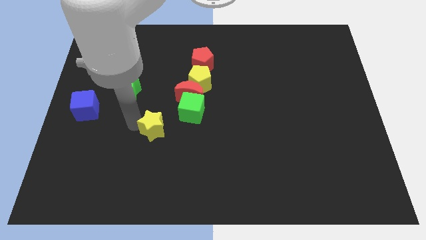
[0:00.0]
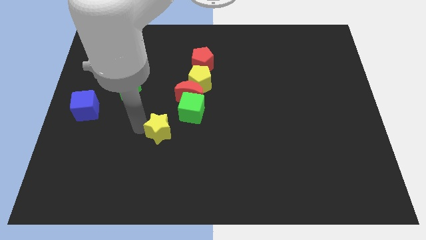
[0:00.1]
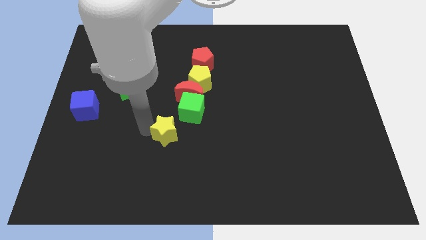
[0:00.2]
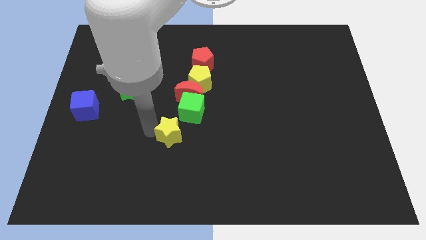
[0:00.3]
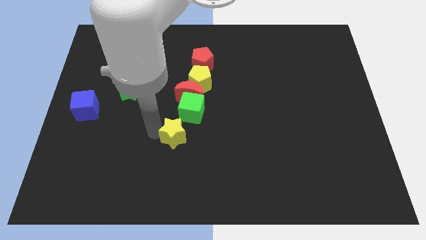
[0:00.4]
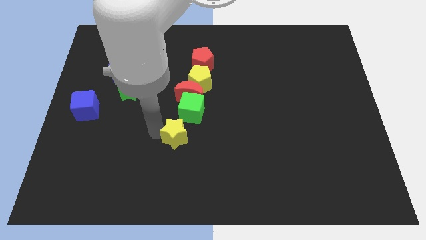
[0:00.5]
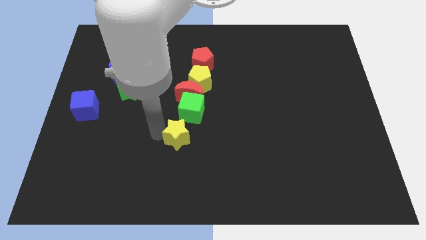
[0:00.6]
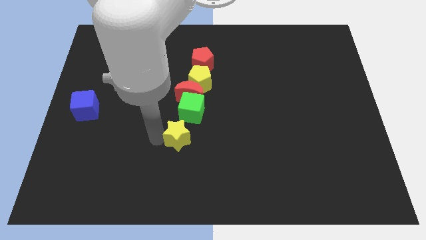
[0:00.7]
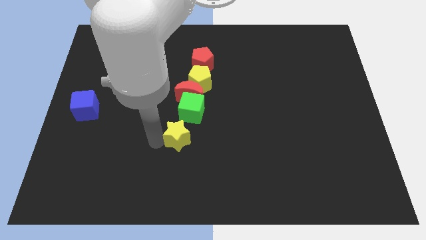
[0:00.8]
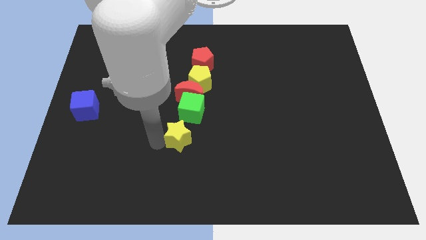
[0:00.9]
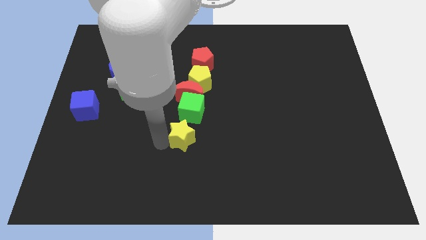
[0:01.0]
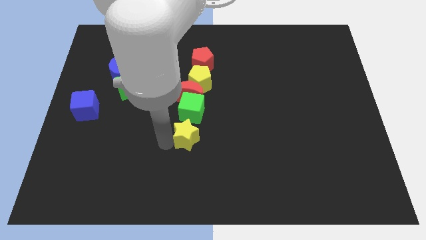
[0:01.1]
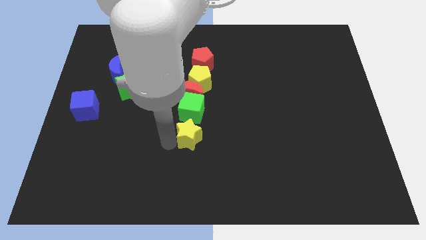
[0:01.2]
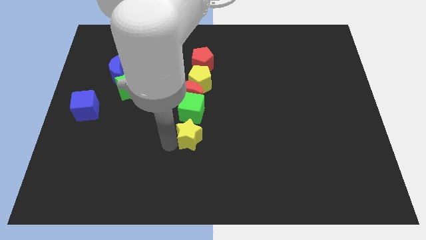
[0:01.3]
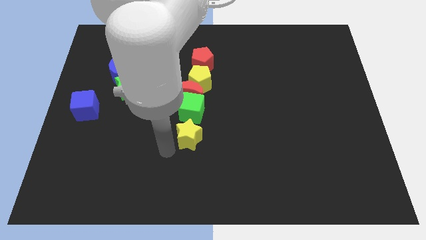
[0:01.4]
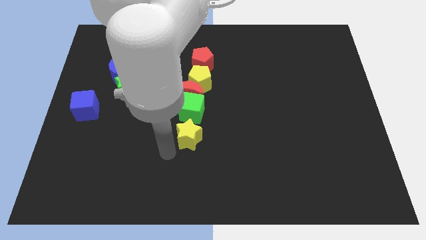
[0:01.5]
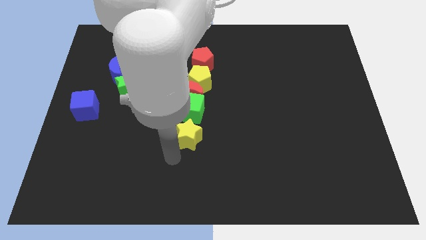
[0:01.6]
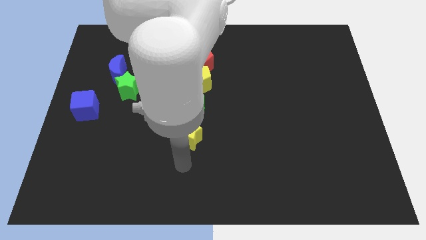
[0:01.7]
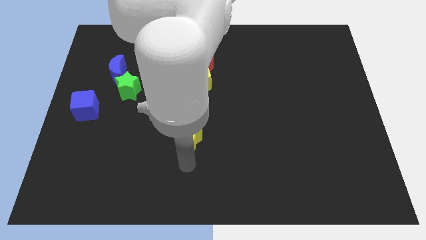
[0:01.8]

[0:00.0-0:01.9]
move the yellow star below the green cube

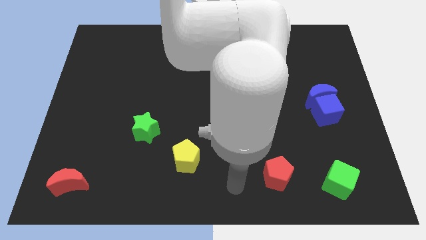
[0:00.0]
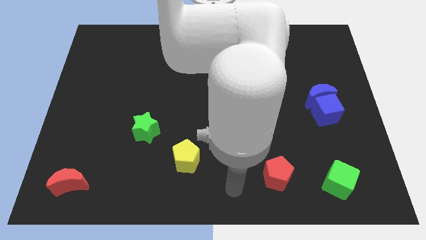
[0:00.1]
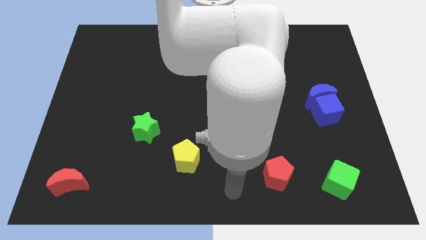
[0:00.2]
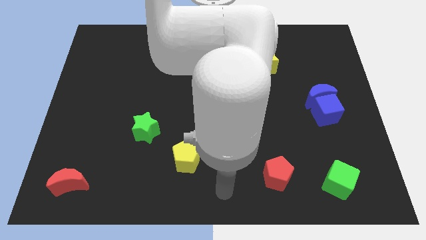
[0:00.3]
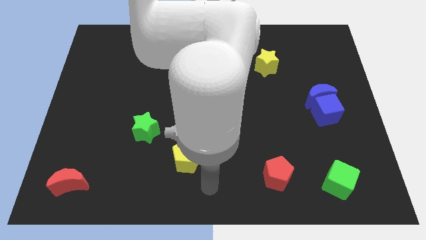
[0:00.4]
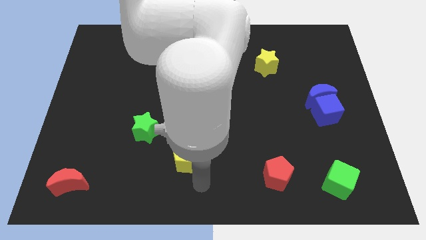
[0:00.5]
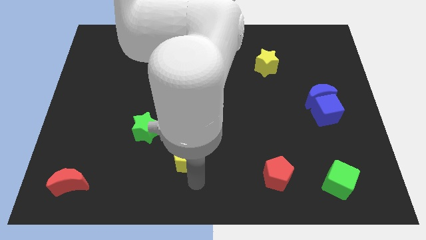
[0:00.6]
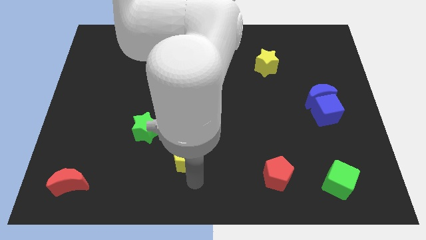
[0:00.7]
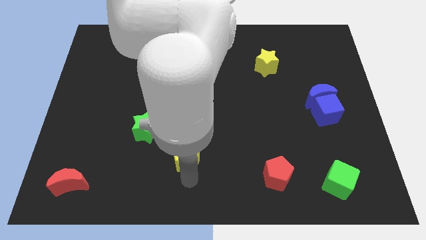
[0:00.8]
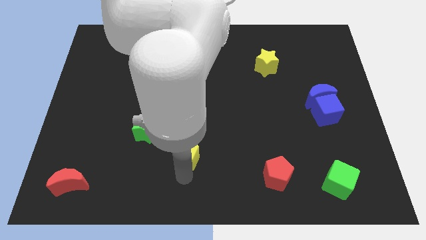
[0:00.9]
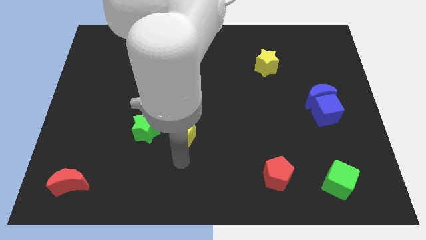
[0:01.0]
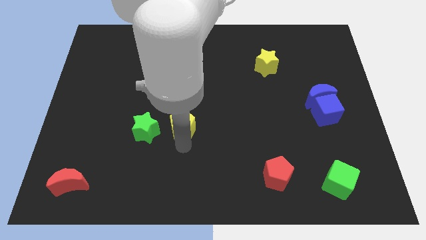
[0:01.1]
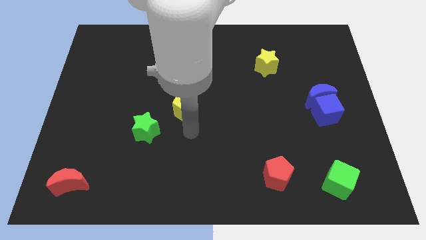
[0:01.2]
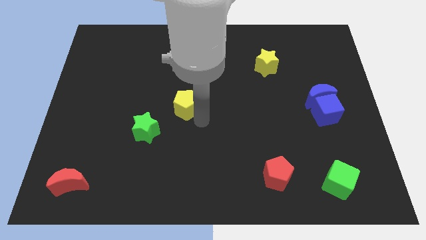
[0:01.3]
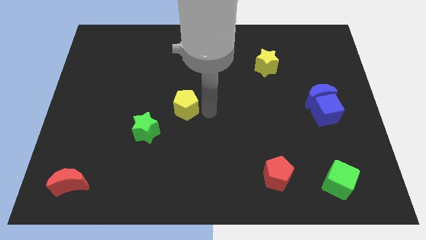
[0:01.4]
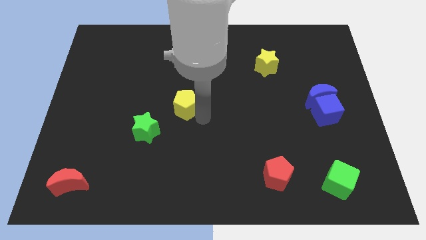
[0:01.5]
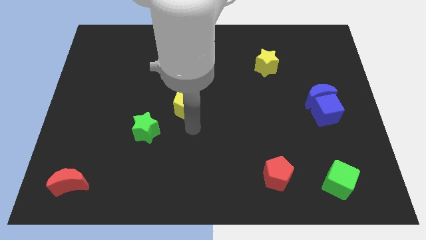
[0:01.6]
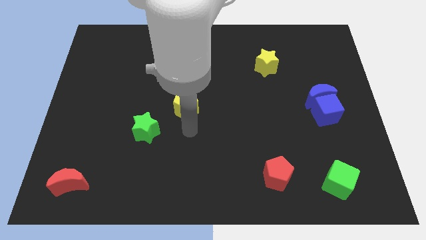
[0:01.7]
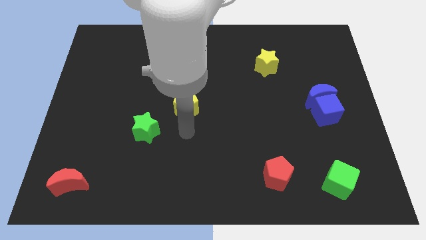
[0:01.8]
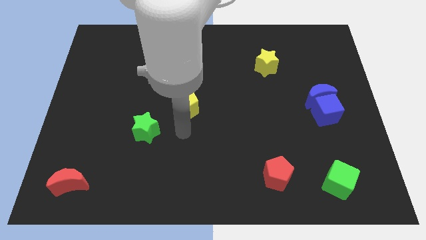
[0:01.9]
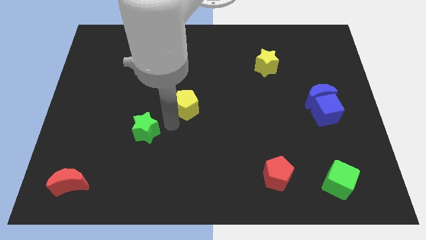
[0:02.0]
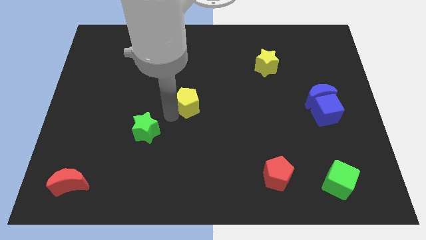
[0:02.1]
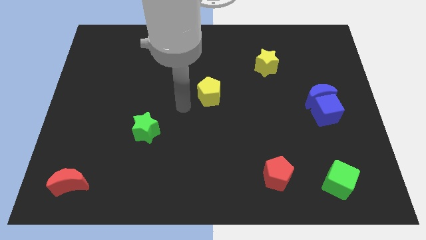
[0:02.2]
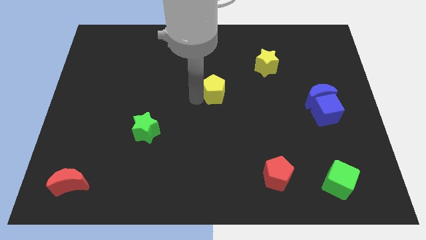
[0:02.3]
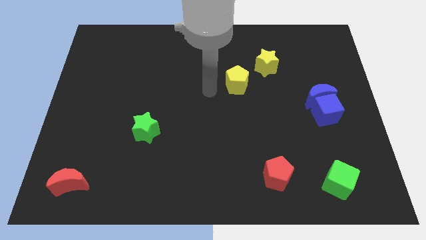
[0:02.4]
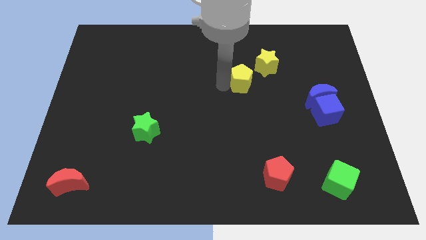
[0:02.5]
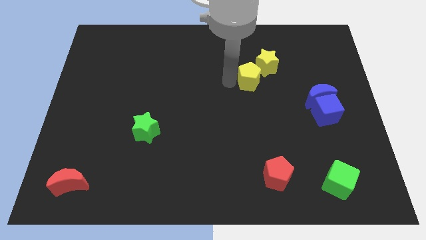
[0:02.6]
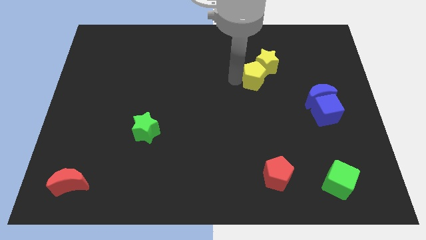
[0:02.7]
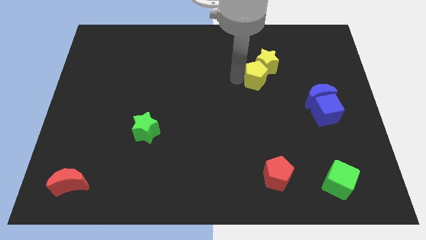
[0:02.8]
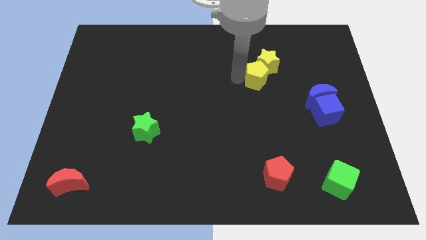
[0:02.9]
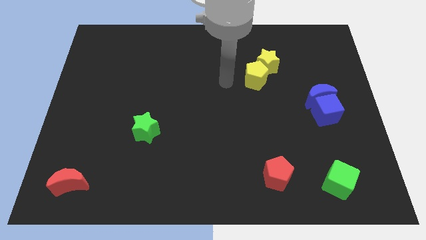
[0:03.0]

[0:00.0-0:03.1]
move the yellow pentagon into the yellow star

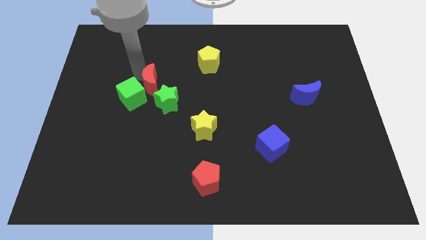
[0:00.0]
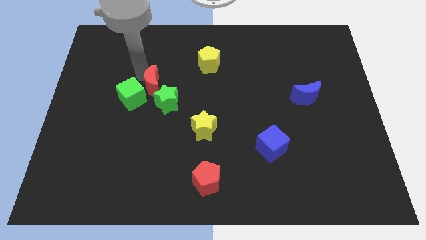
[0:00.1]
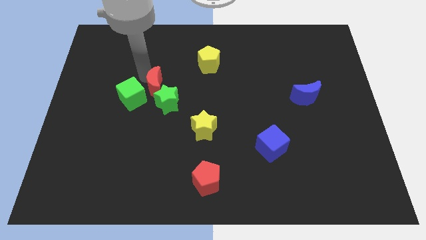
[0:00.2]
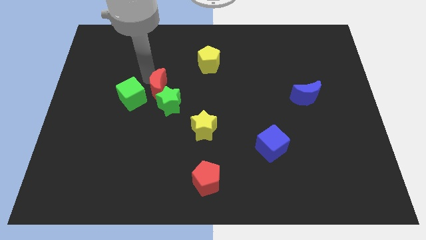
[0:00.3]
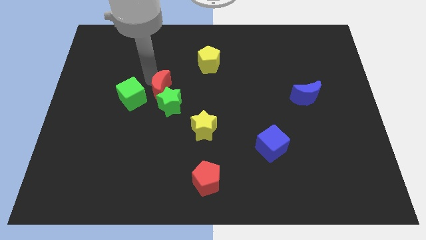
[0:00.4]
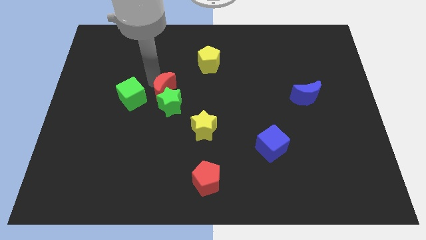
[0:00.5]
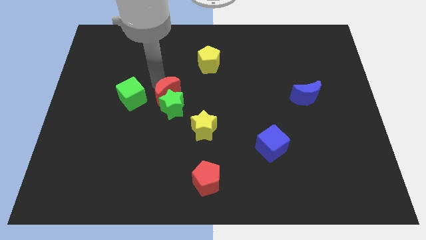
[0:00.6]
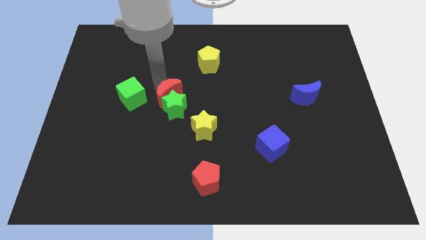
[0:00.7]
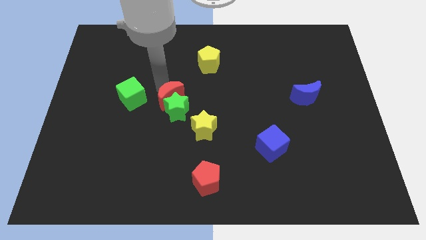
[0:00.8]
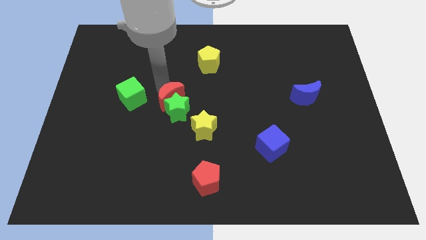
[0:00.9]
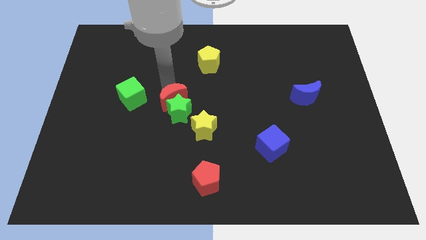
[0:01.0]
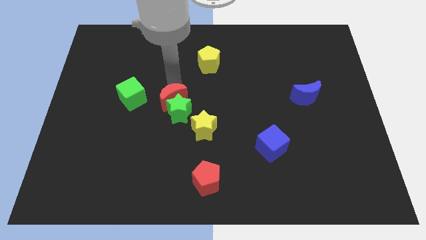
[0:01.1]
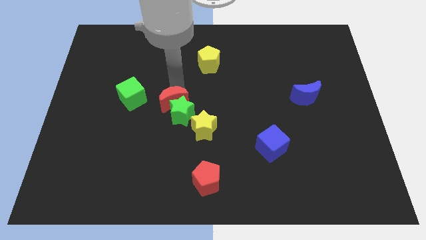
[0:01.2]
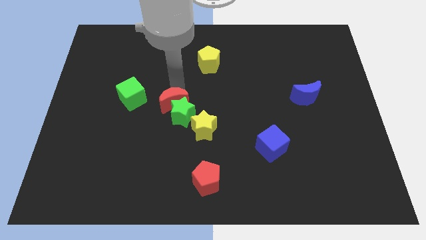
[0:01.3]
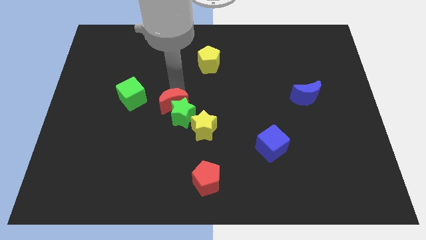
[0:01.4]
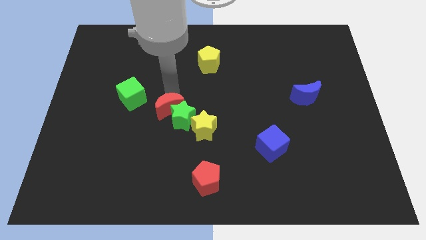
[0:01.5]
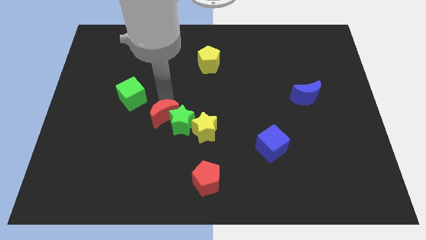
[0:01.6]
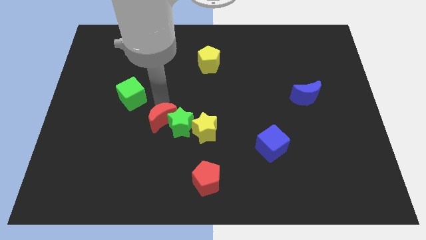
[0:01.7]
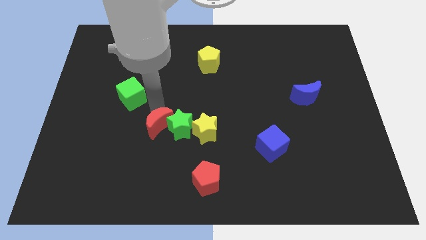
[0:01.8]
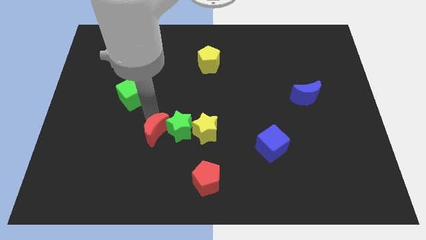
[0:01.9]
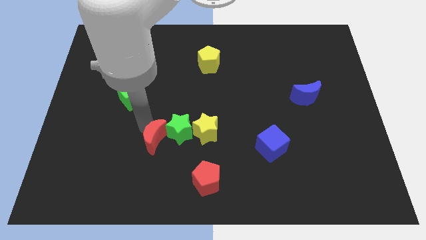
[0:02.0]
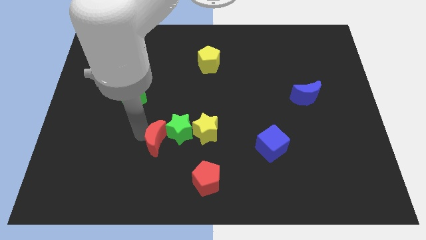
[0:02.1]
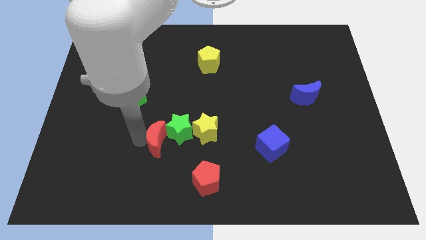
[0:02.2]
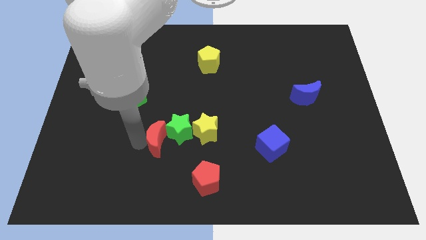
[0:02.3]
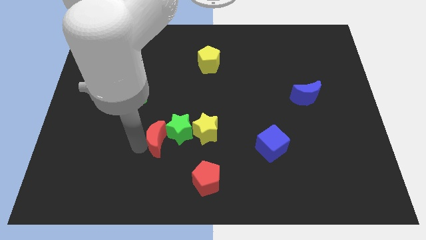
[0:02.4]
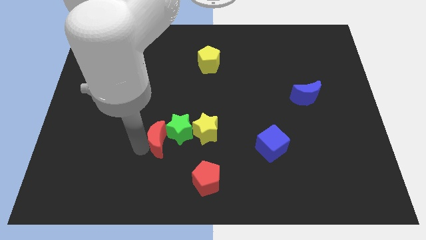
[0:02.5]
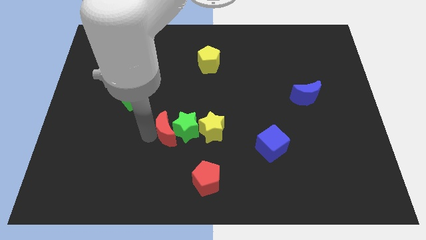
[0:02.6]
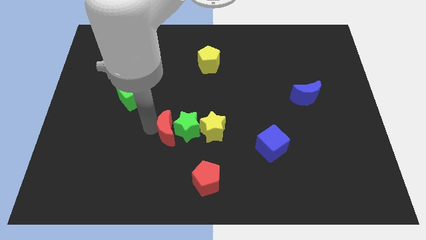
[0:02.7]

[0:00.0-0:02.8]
place the red crescent to the left of green star

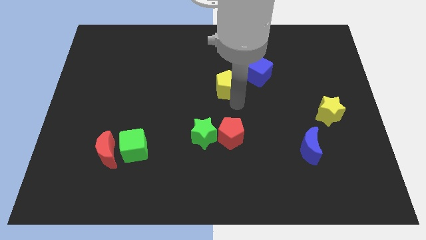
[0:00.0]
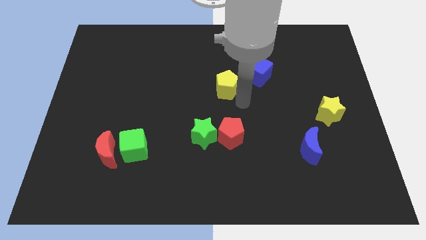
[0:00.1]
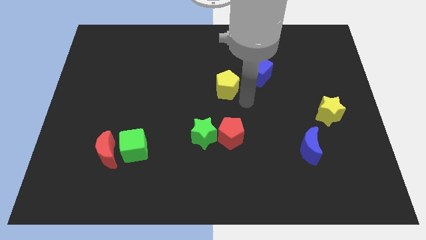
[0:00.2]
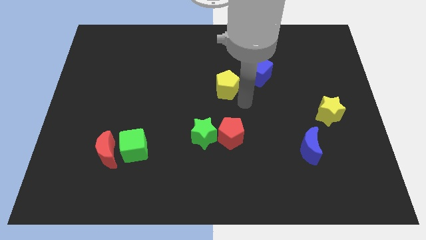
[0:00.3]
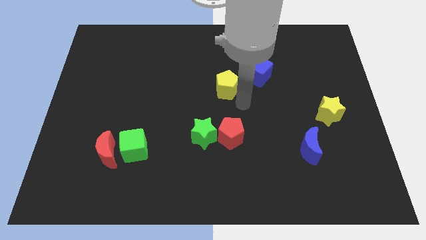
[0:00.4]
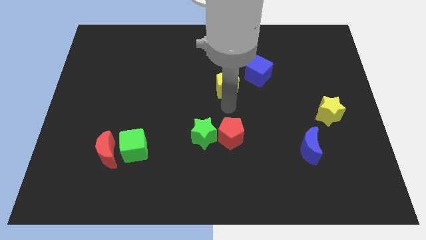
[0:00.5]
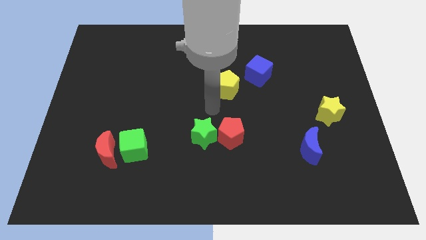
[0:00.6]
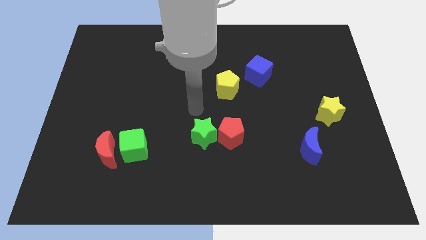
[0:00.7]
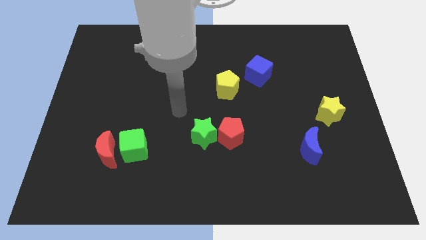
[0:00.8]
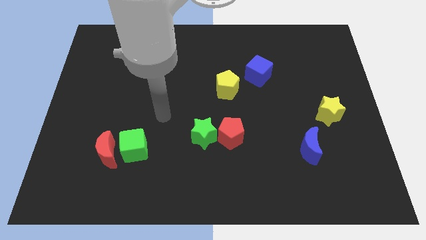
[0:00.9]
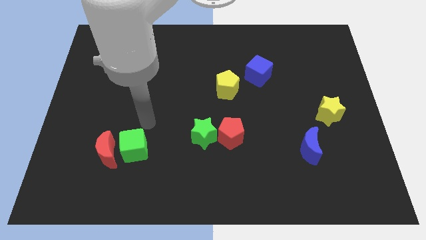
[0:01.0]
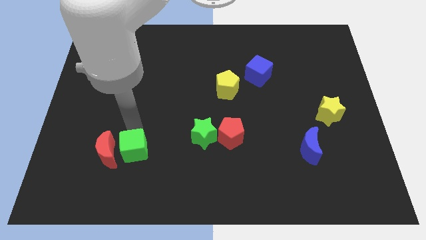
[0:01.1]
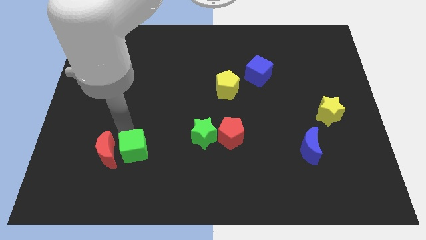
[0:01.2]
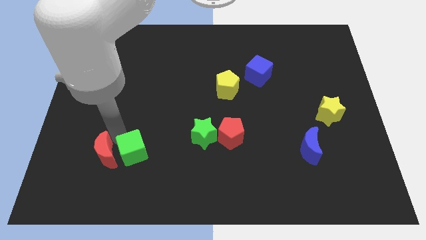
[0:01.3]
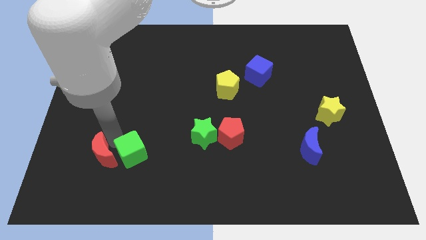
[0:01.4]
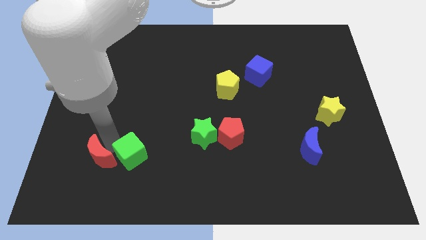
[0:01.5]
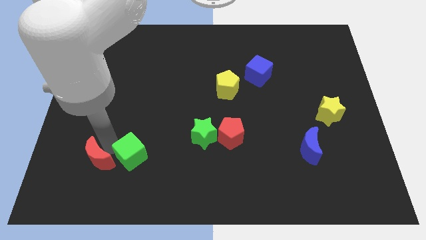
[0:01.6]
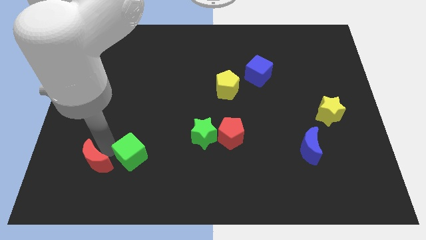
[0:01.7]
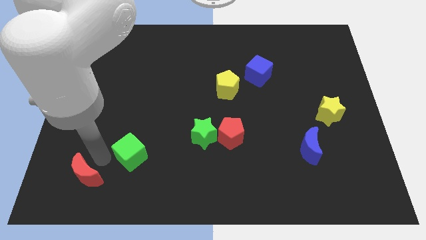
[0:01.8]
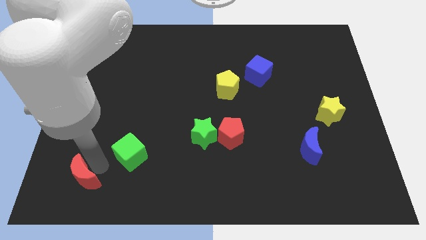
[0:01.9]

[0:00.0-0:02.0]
place the arm in between the green cube and red crescent
